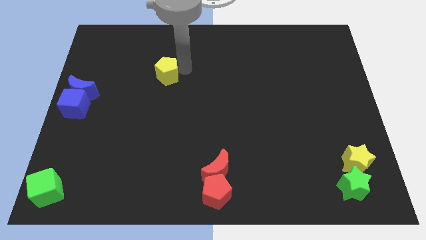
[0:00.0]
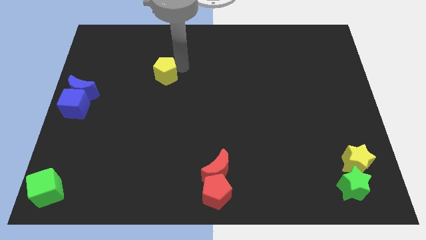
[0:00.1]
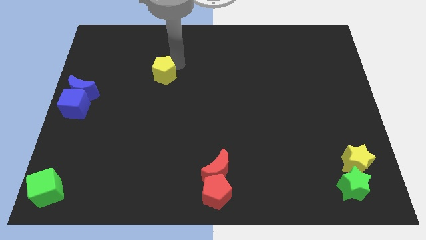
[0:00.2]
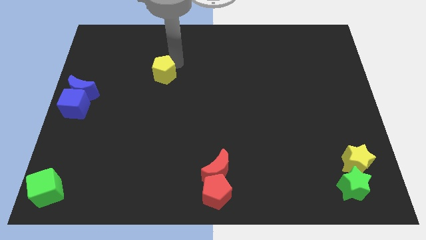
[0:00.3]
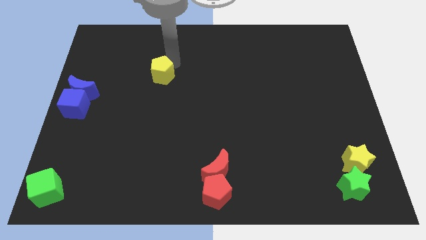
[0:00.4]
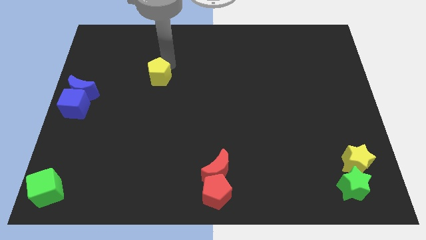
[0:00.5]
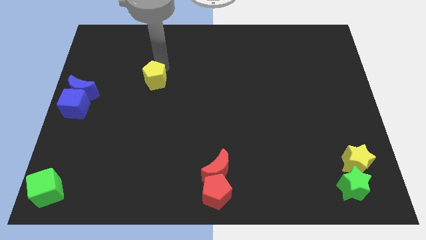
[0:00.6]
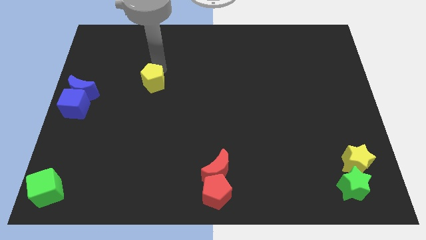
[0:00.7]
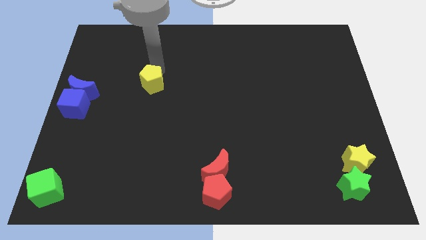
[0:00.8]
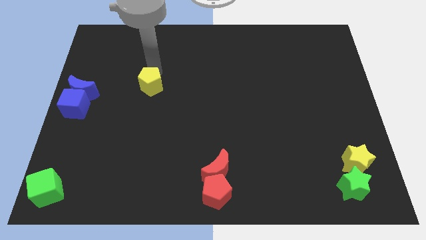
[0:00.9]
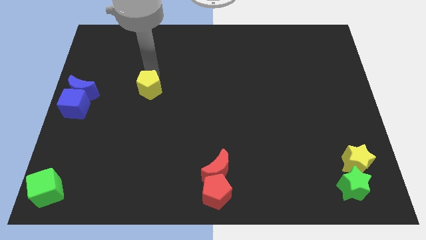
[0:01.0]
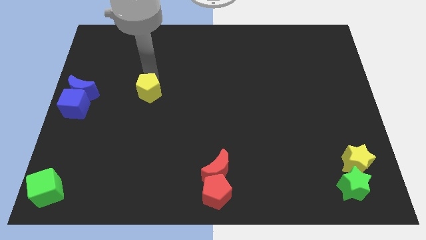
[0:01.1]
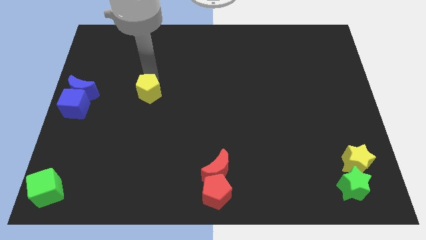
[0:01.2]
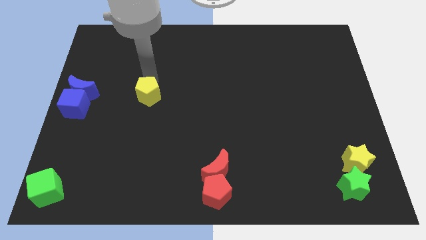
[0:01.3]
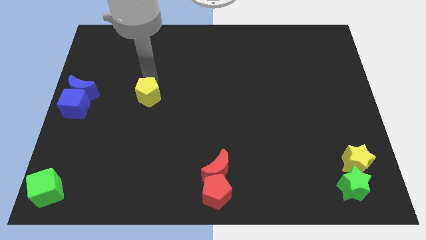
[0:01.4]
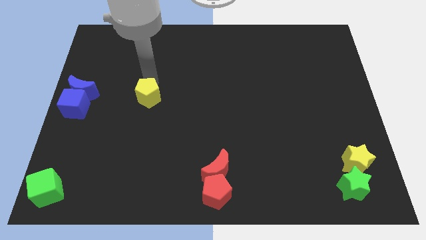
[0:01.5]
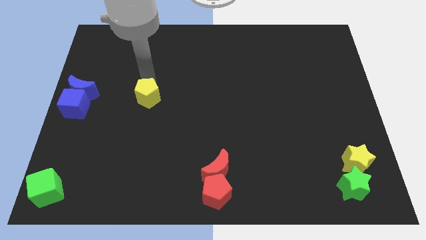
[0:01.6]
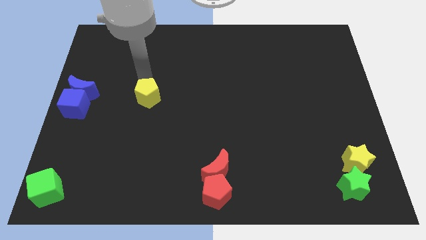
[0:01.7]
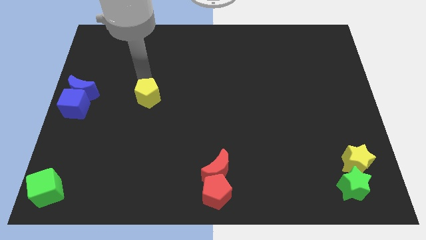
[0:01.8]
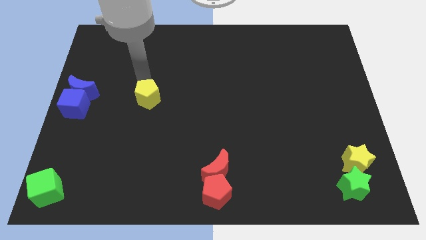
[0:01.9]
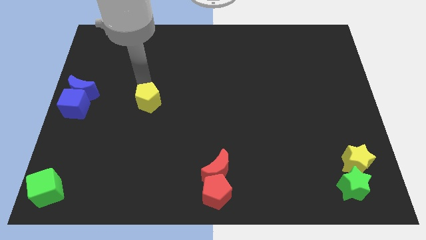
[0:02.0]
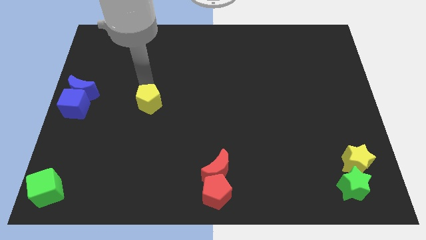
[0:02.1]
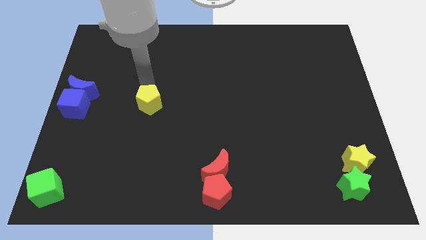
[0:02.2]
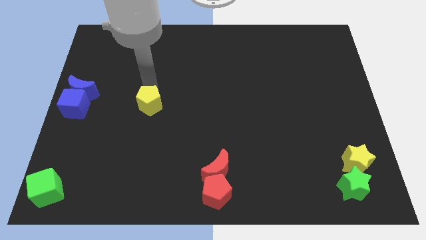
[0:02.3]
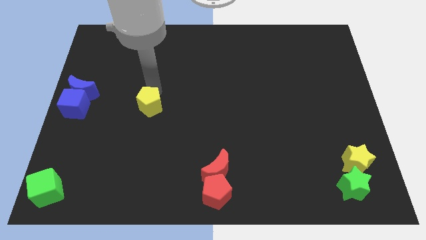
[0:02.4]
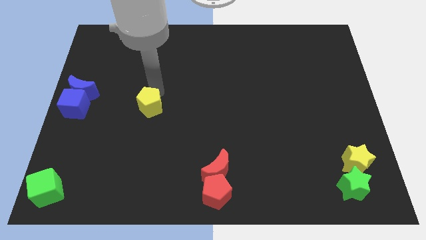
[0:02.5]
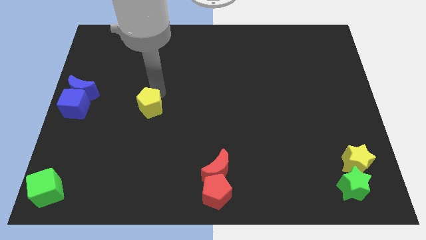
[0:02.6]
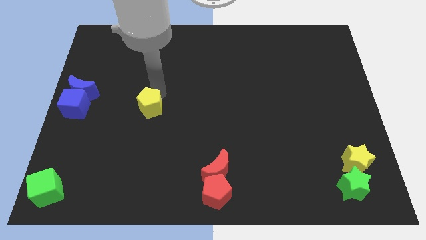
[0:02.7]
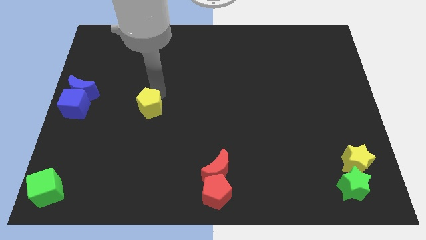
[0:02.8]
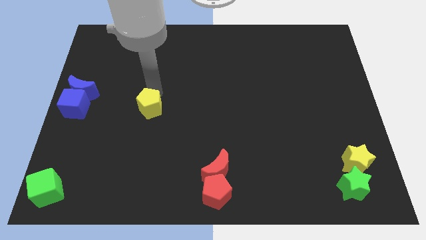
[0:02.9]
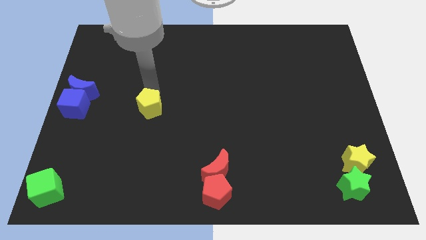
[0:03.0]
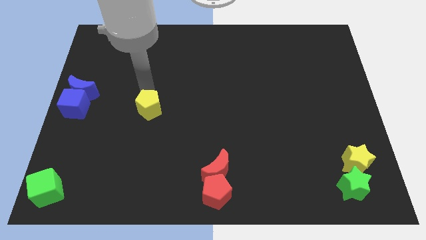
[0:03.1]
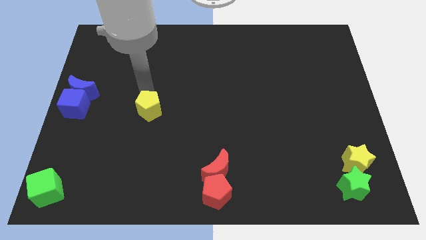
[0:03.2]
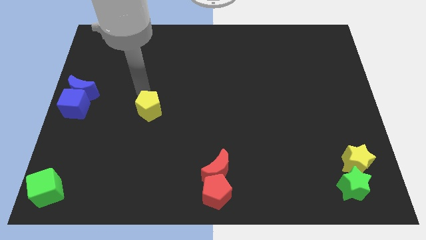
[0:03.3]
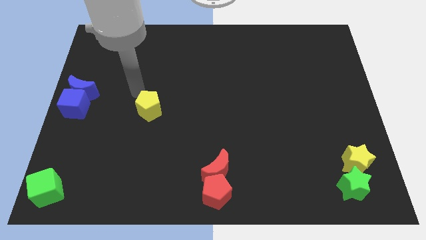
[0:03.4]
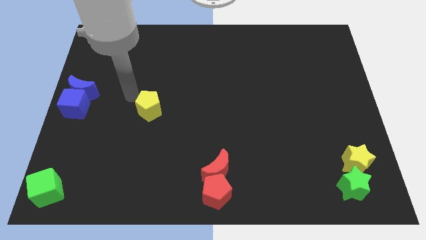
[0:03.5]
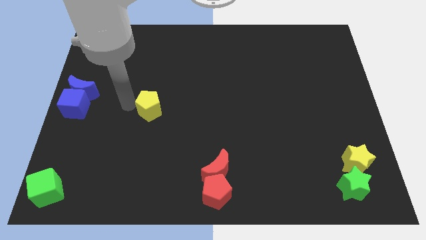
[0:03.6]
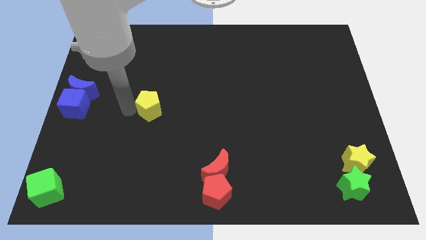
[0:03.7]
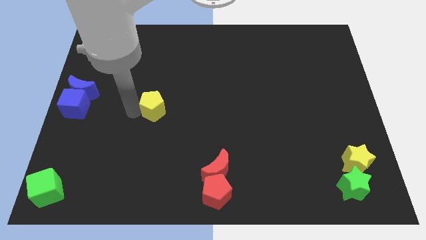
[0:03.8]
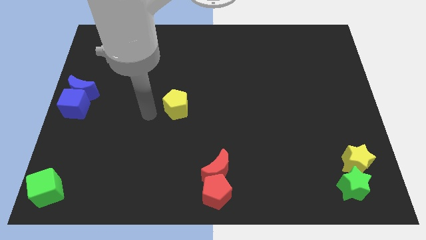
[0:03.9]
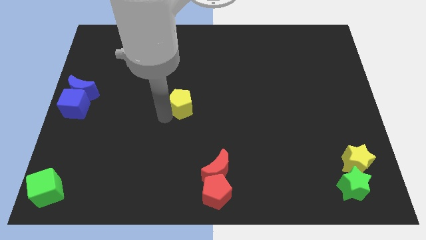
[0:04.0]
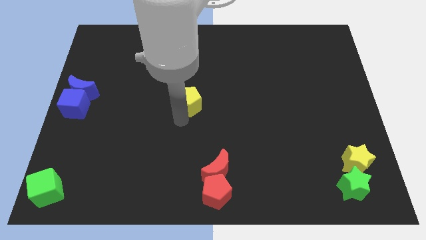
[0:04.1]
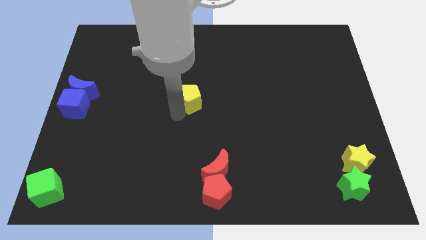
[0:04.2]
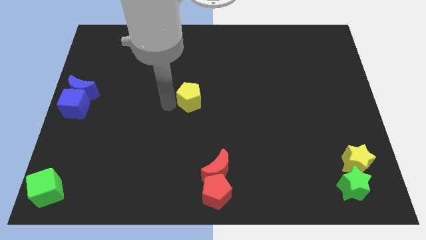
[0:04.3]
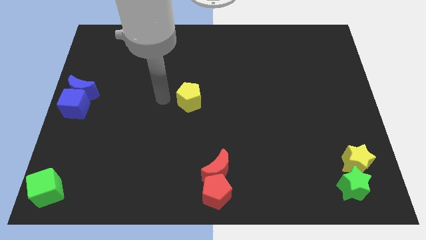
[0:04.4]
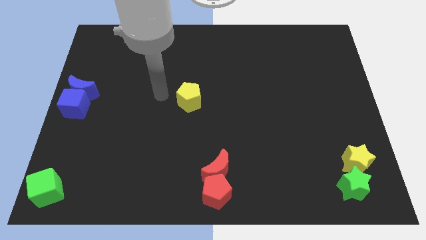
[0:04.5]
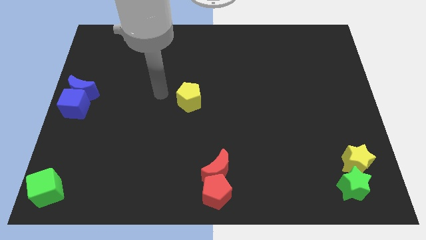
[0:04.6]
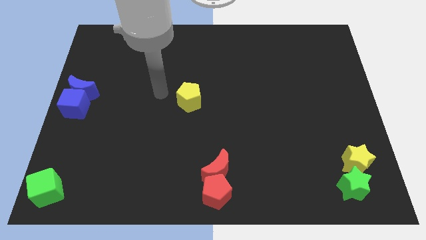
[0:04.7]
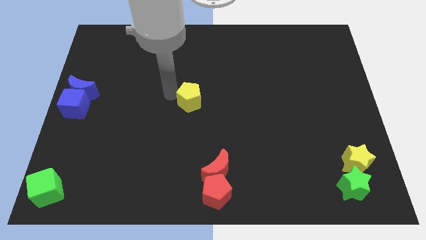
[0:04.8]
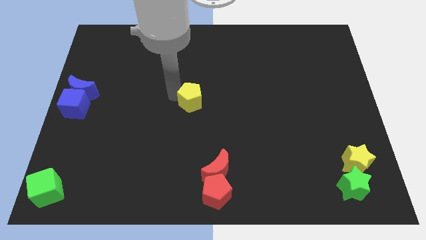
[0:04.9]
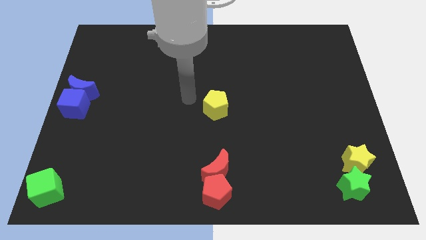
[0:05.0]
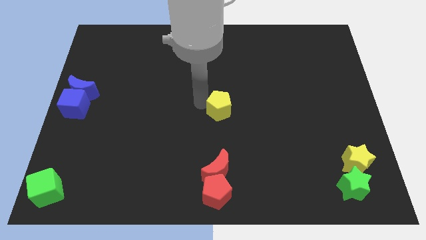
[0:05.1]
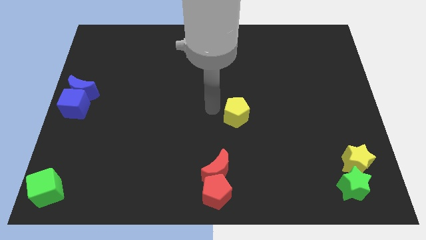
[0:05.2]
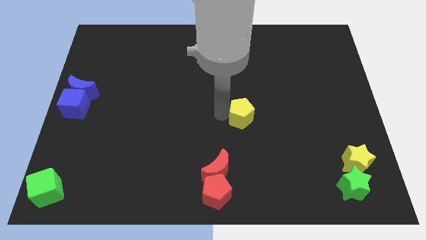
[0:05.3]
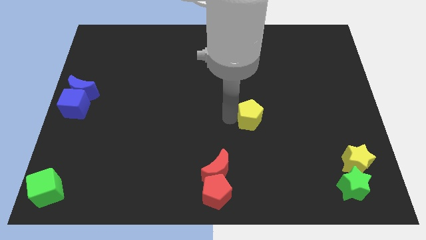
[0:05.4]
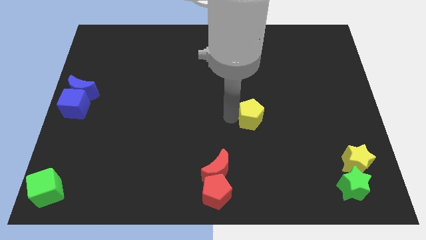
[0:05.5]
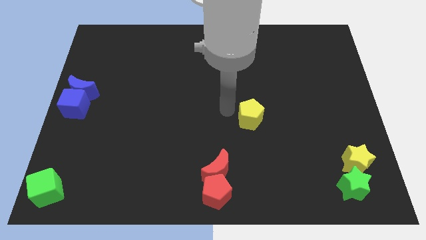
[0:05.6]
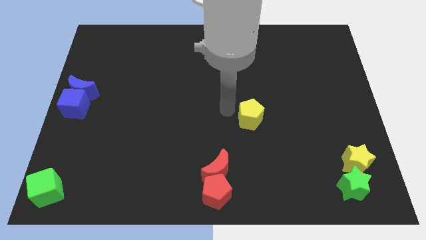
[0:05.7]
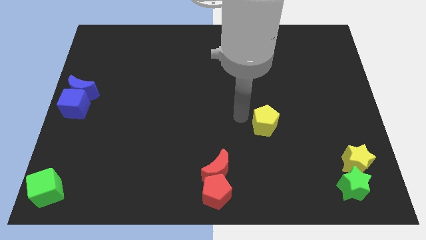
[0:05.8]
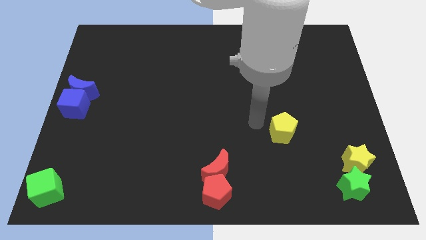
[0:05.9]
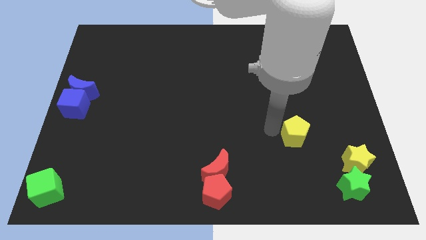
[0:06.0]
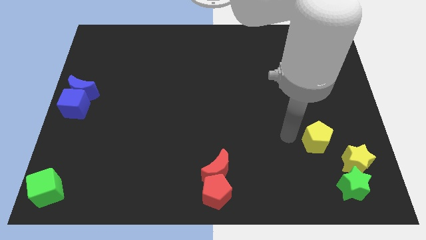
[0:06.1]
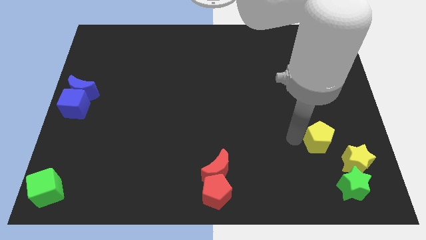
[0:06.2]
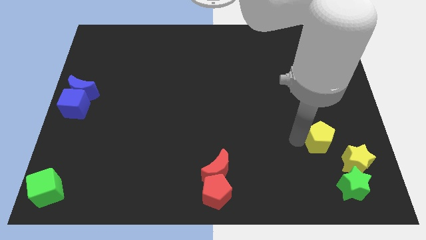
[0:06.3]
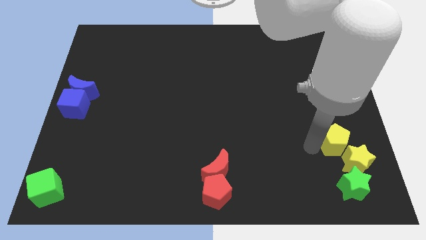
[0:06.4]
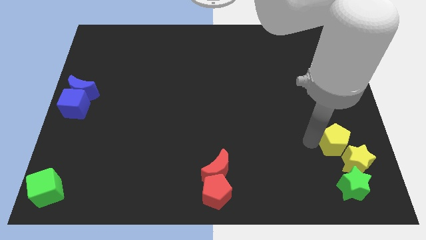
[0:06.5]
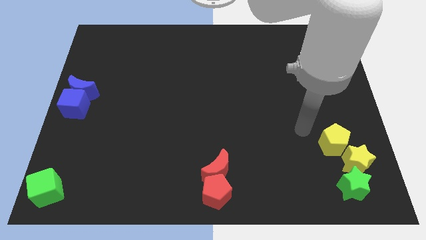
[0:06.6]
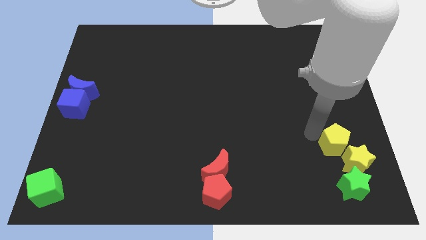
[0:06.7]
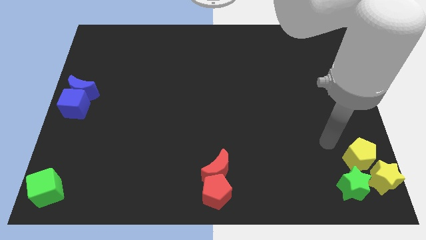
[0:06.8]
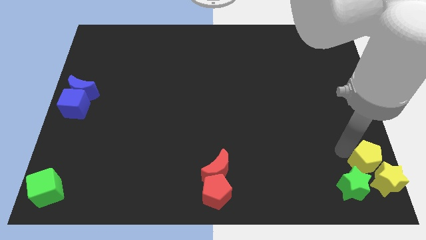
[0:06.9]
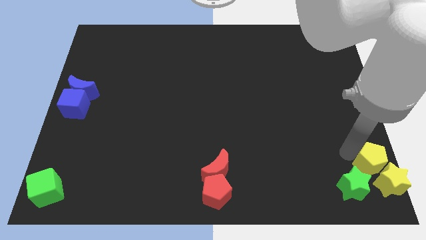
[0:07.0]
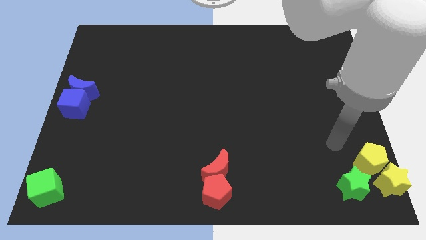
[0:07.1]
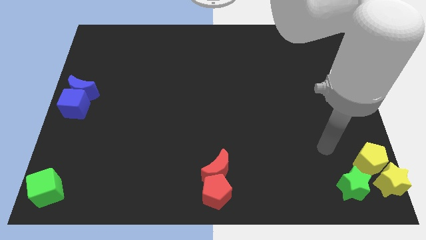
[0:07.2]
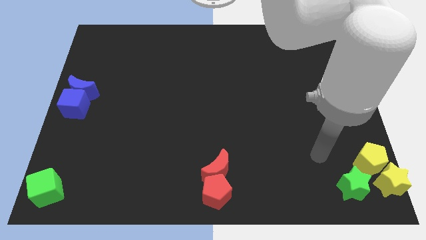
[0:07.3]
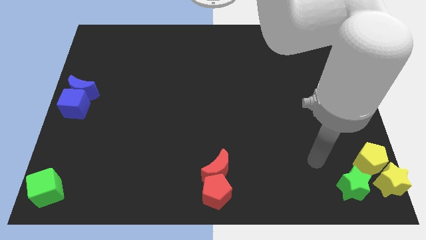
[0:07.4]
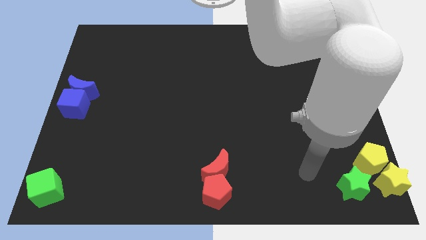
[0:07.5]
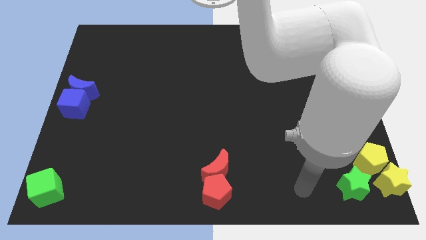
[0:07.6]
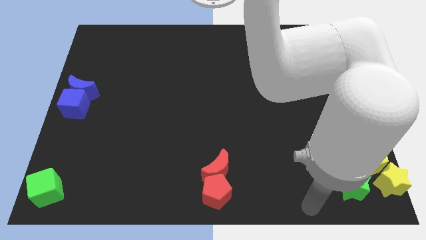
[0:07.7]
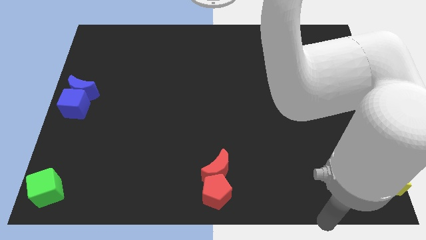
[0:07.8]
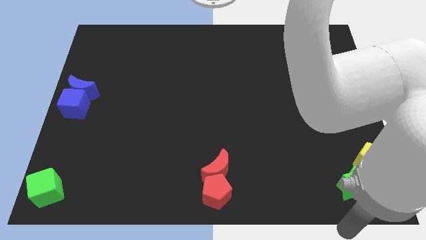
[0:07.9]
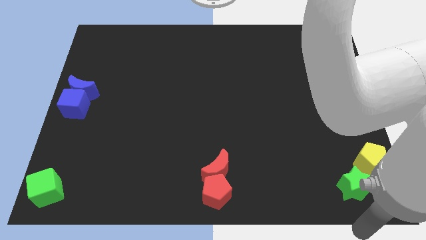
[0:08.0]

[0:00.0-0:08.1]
move the yellow pentagon towards the top left side of the yellow star

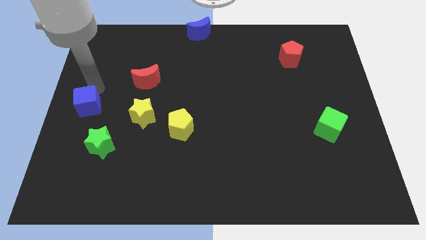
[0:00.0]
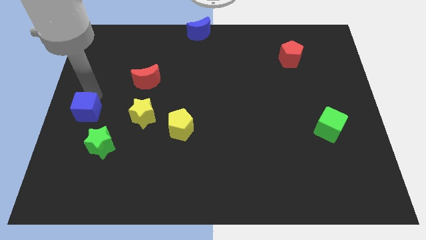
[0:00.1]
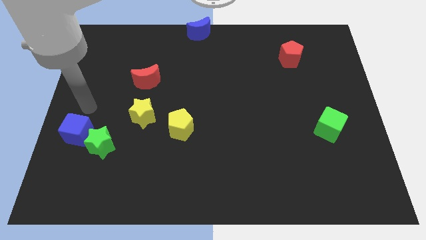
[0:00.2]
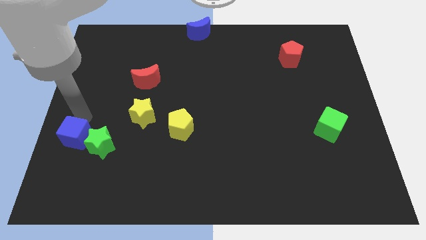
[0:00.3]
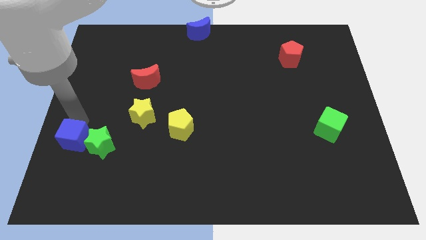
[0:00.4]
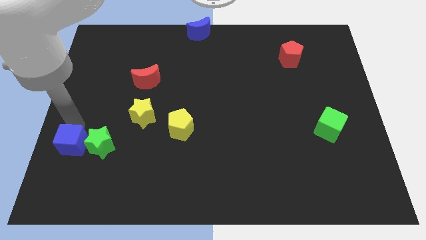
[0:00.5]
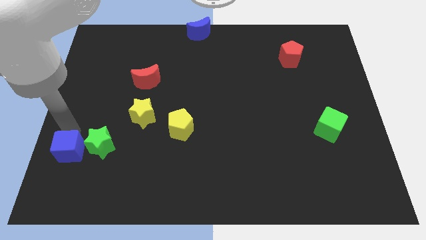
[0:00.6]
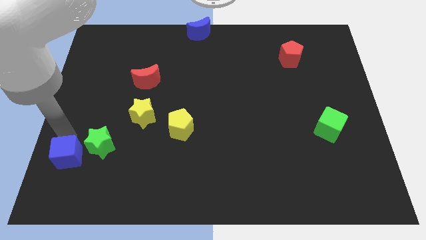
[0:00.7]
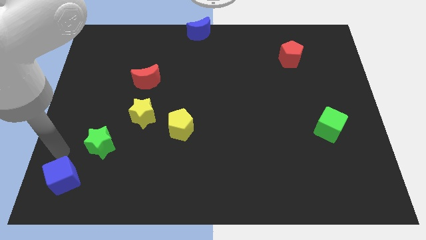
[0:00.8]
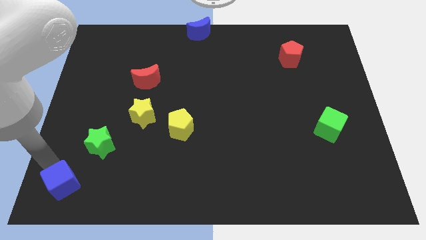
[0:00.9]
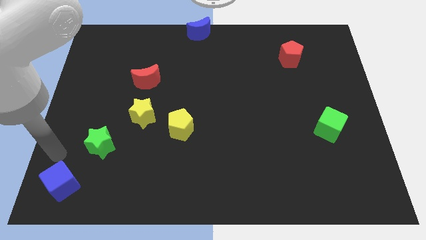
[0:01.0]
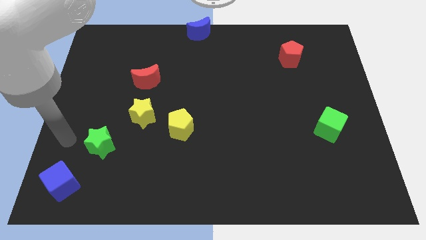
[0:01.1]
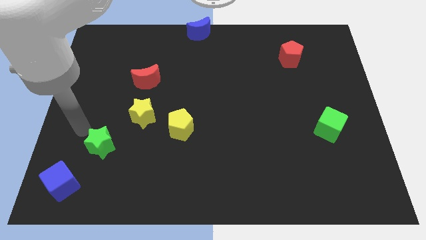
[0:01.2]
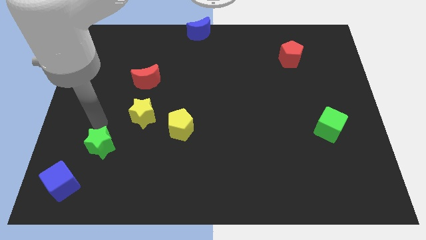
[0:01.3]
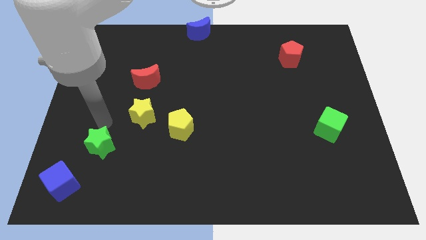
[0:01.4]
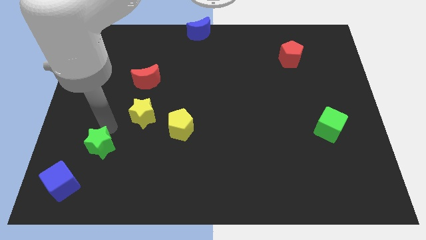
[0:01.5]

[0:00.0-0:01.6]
move blue cube to the bottom left corner of the board
